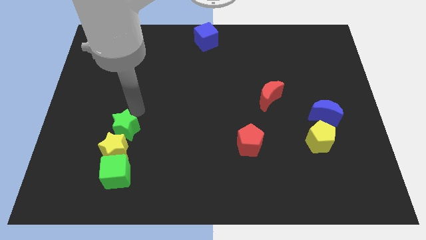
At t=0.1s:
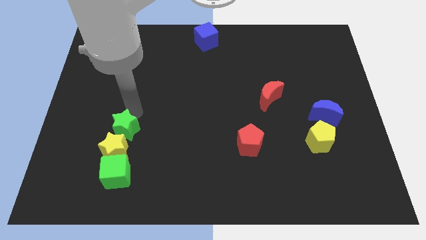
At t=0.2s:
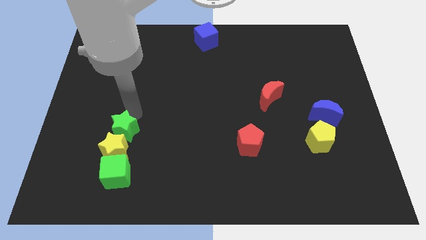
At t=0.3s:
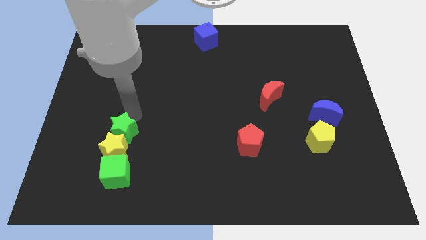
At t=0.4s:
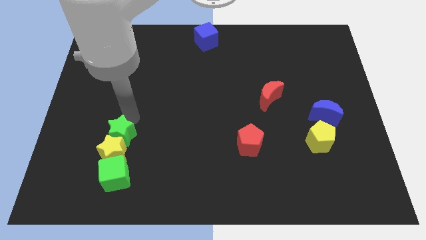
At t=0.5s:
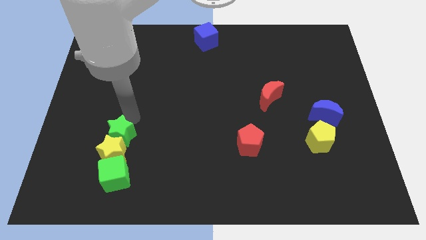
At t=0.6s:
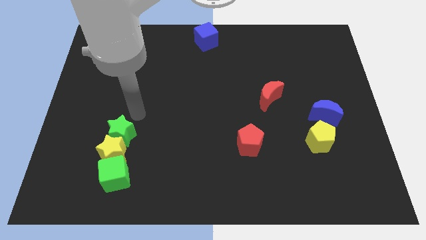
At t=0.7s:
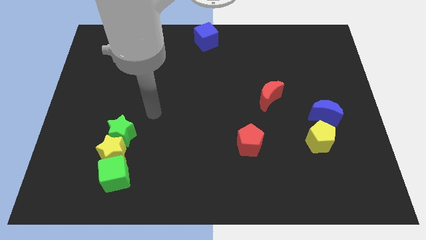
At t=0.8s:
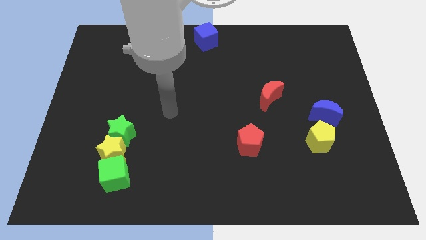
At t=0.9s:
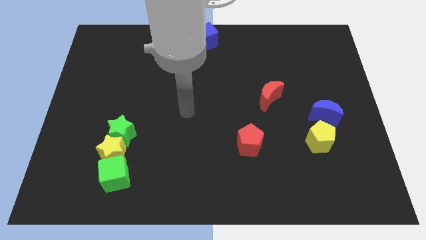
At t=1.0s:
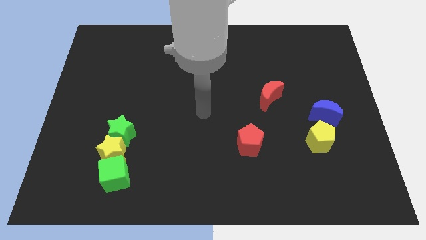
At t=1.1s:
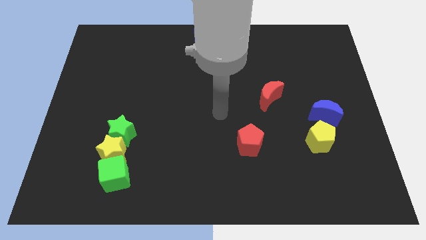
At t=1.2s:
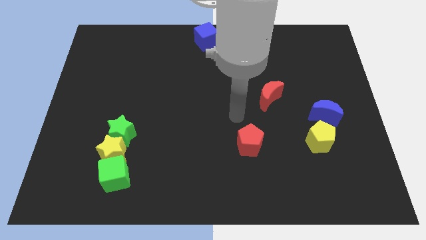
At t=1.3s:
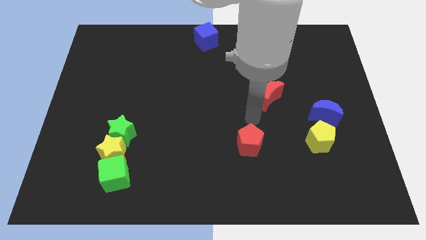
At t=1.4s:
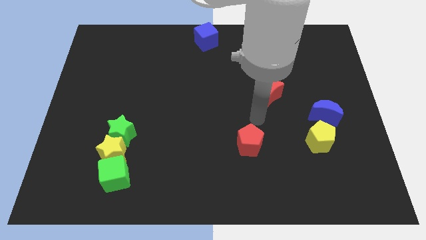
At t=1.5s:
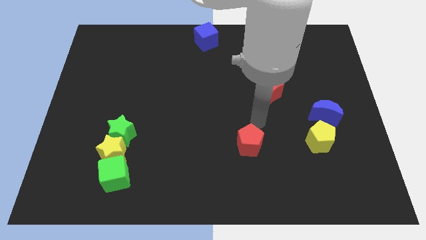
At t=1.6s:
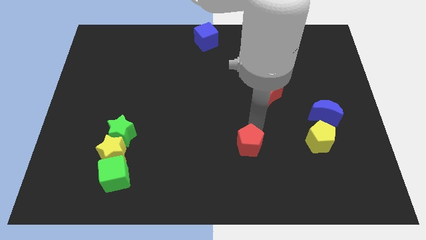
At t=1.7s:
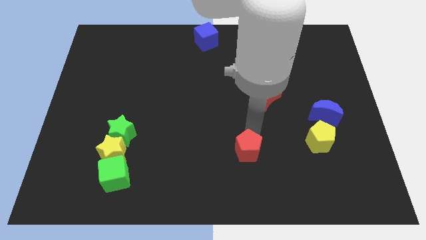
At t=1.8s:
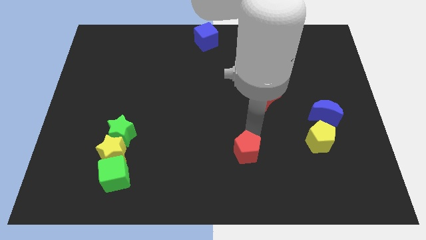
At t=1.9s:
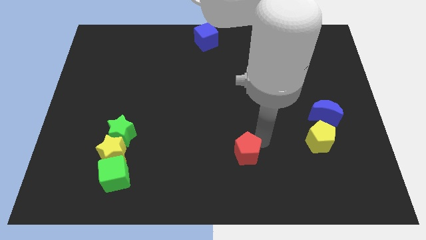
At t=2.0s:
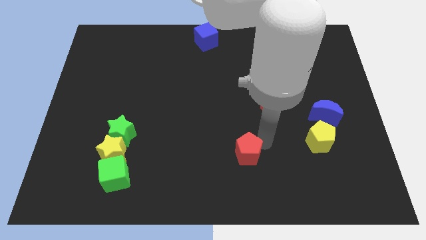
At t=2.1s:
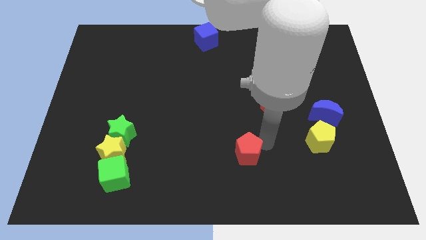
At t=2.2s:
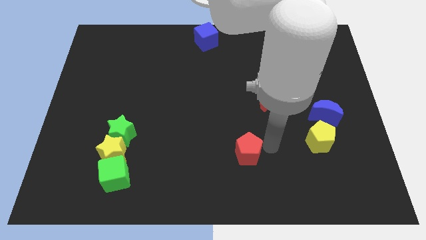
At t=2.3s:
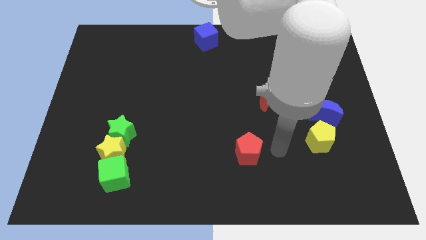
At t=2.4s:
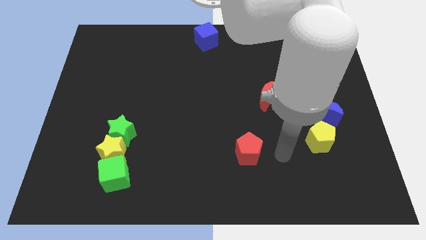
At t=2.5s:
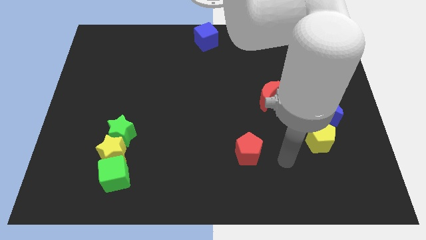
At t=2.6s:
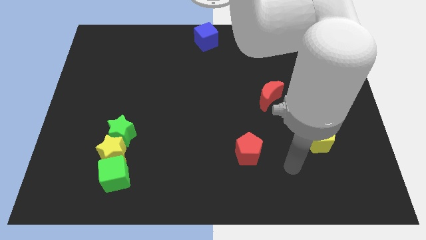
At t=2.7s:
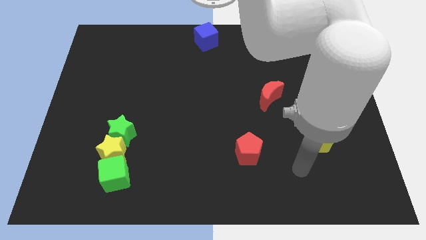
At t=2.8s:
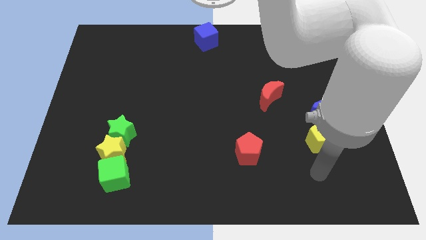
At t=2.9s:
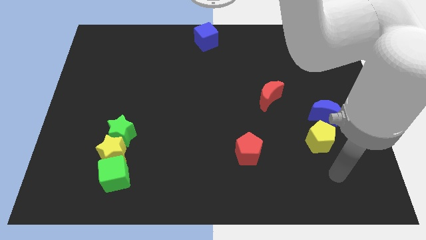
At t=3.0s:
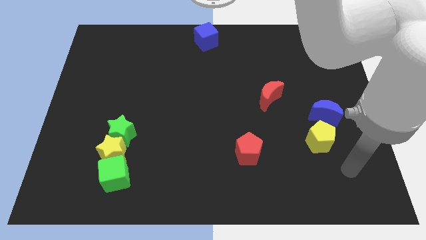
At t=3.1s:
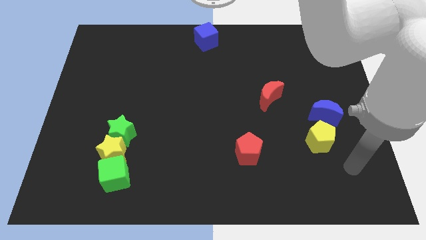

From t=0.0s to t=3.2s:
push the red pentagon slightly downward

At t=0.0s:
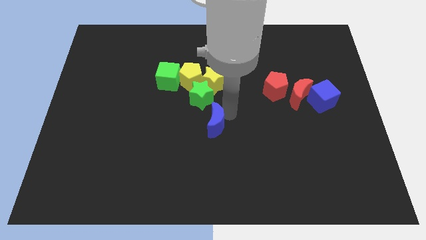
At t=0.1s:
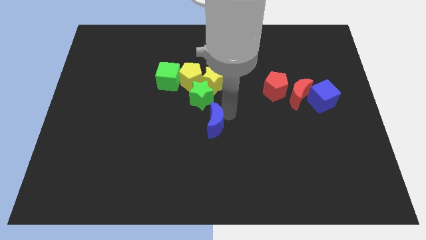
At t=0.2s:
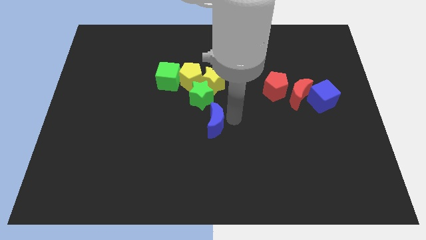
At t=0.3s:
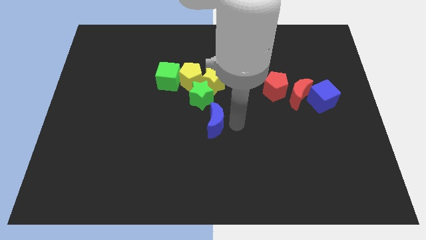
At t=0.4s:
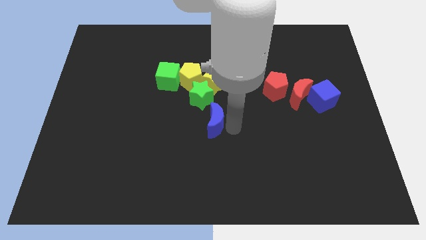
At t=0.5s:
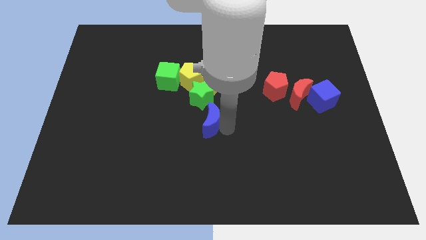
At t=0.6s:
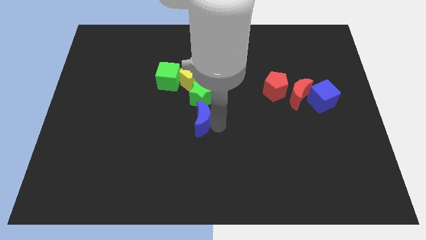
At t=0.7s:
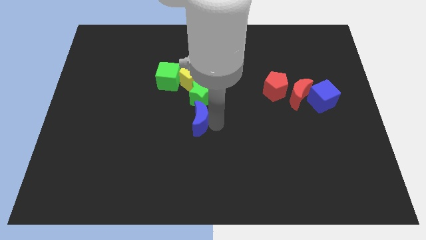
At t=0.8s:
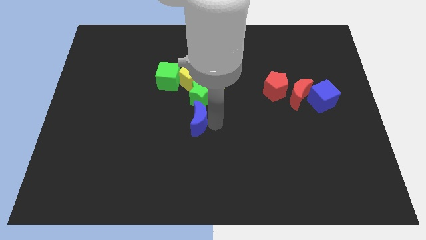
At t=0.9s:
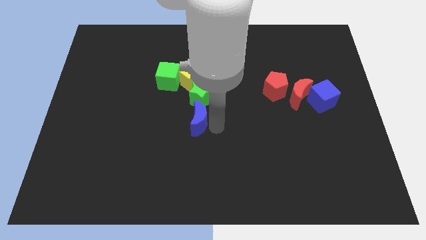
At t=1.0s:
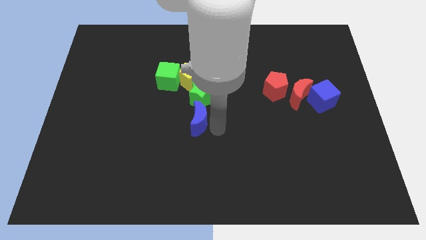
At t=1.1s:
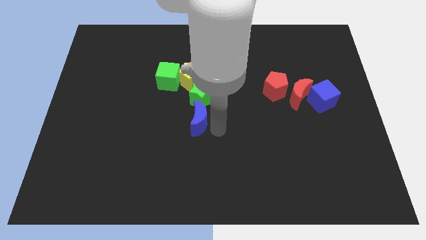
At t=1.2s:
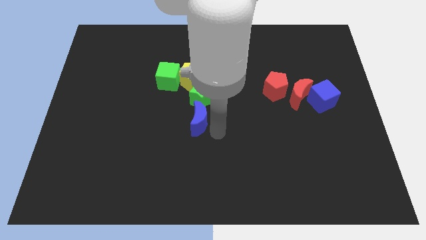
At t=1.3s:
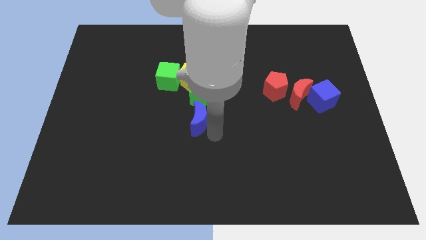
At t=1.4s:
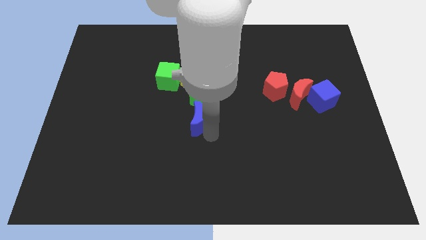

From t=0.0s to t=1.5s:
move the blue crescent underneath the green star

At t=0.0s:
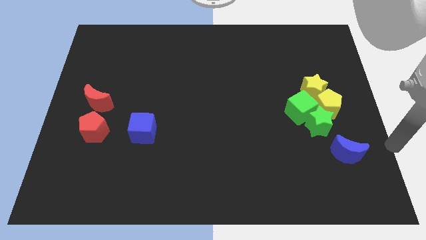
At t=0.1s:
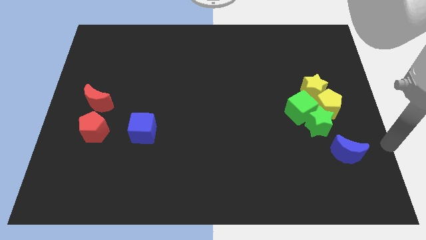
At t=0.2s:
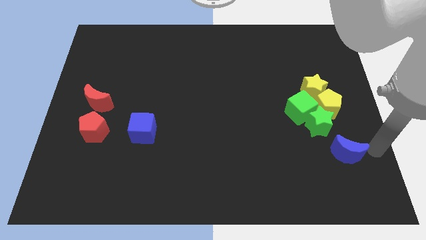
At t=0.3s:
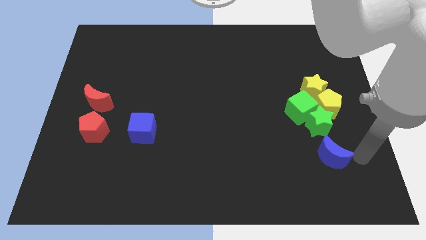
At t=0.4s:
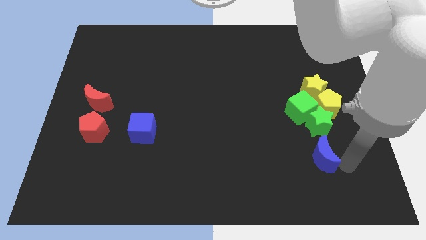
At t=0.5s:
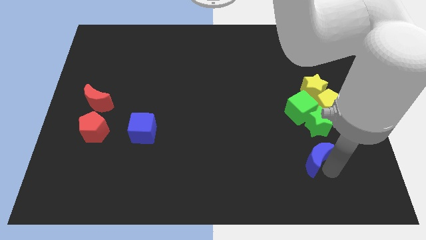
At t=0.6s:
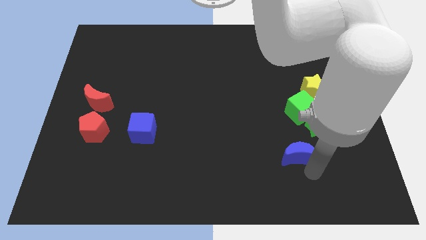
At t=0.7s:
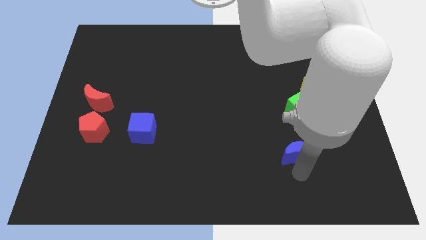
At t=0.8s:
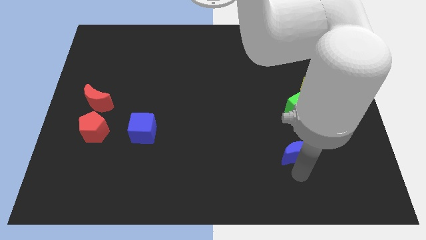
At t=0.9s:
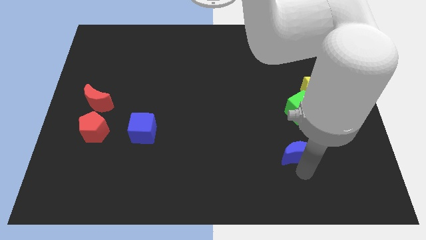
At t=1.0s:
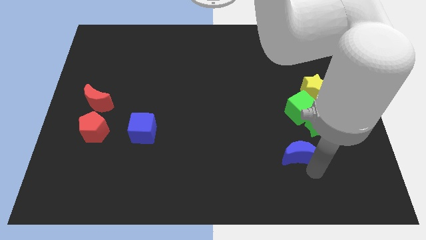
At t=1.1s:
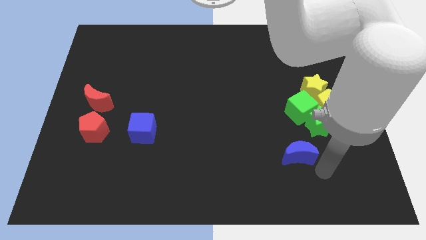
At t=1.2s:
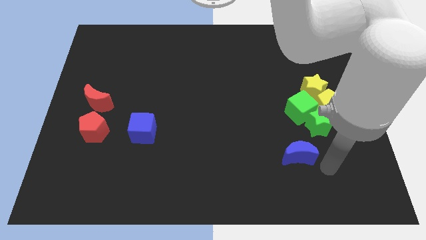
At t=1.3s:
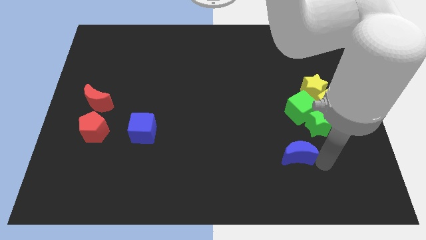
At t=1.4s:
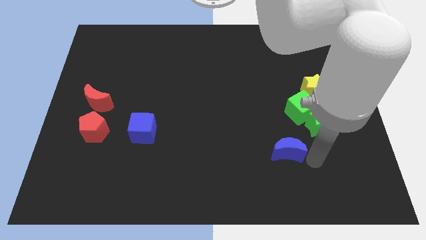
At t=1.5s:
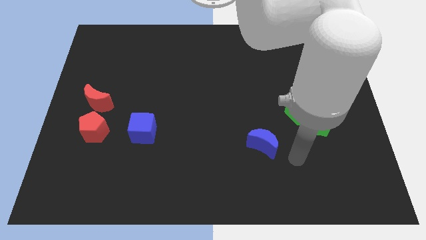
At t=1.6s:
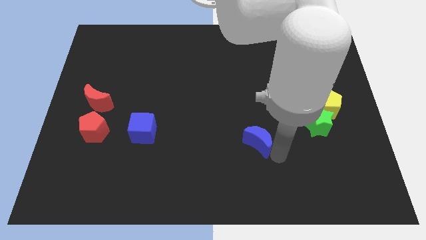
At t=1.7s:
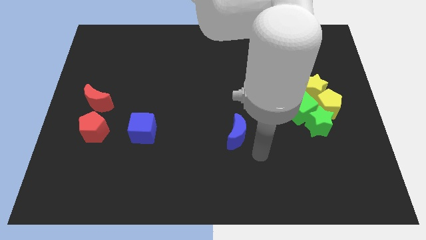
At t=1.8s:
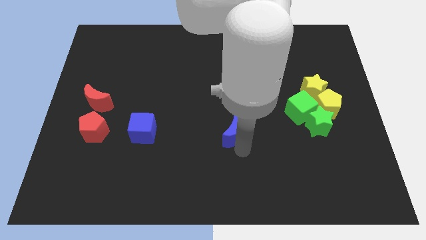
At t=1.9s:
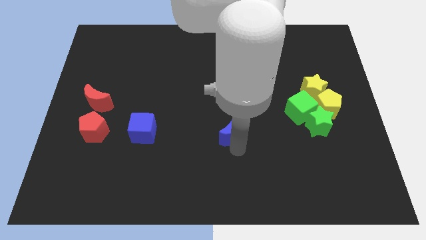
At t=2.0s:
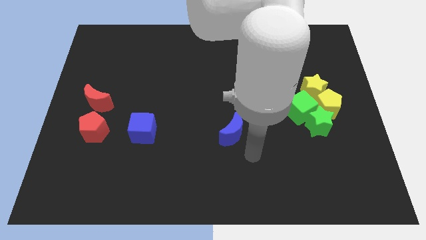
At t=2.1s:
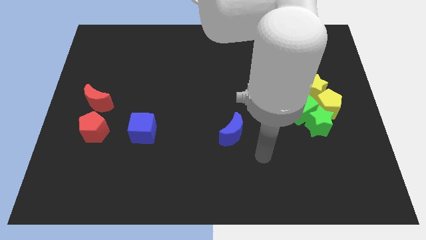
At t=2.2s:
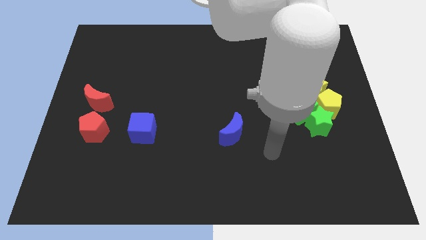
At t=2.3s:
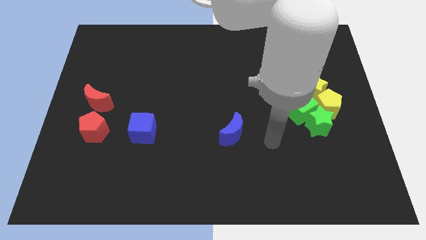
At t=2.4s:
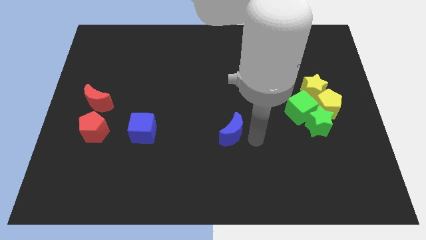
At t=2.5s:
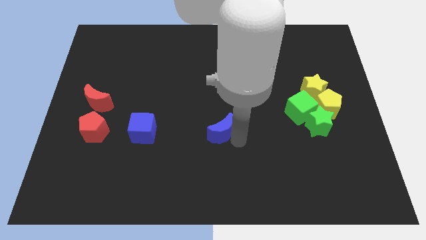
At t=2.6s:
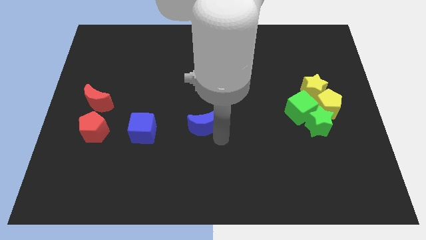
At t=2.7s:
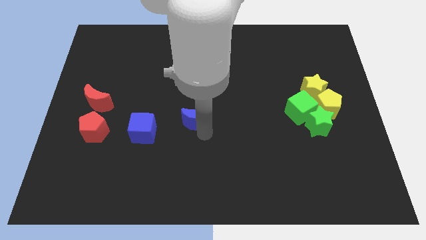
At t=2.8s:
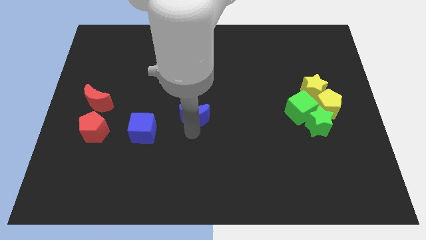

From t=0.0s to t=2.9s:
move blue moon to left

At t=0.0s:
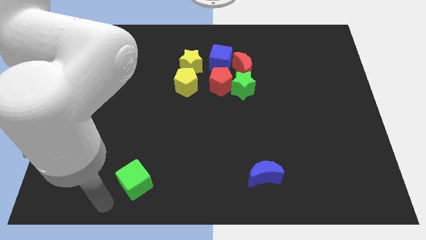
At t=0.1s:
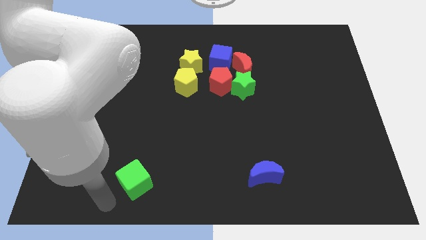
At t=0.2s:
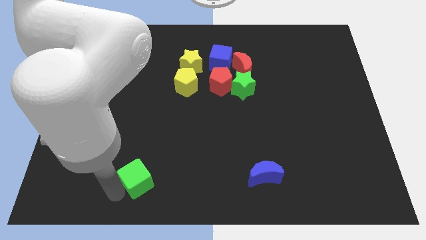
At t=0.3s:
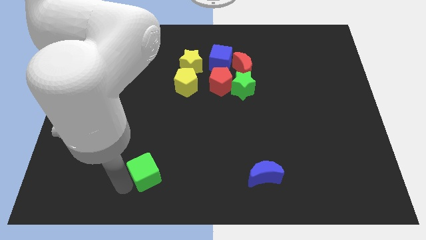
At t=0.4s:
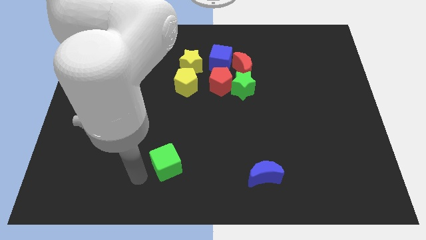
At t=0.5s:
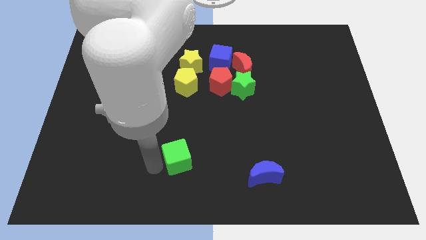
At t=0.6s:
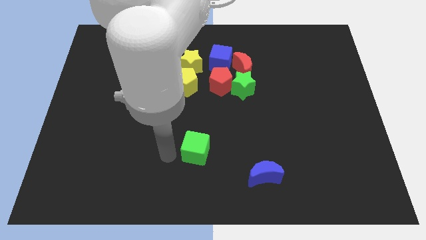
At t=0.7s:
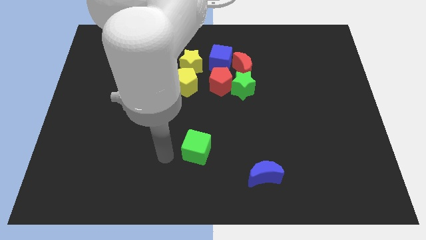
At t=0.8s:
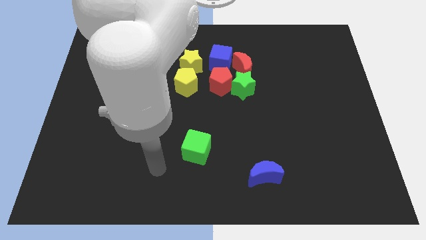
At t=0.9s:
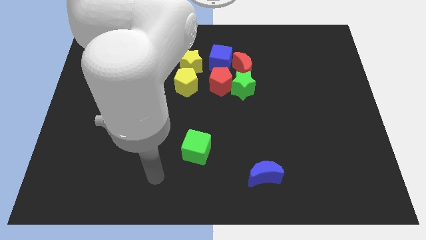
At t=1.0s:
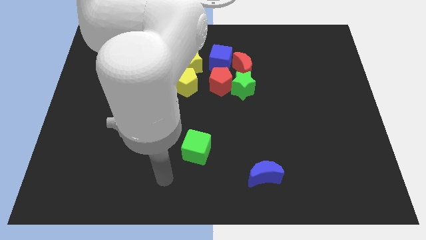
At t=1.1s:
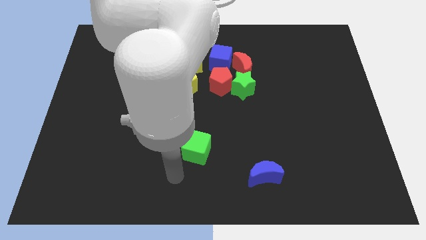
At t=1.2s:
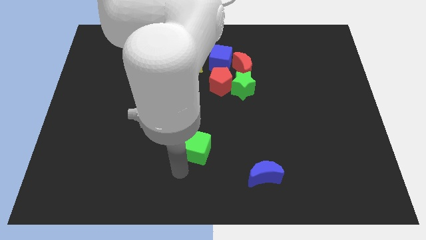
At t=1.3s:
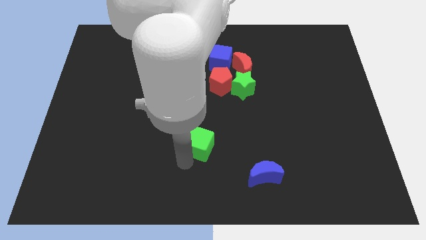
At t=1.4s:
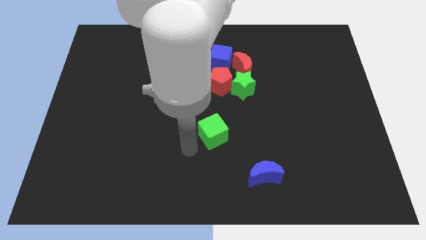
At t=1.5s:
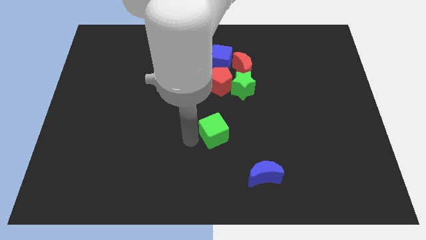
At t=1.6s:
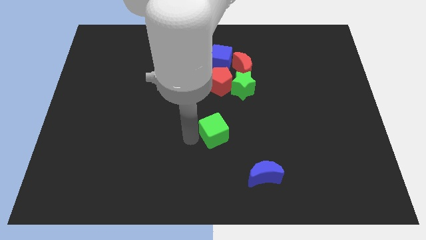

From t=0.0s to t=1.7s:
put the green cube below the red pentagon
